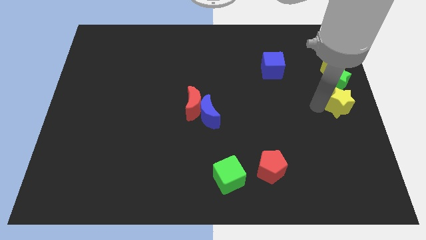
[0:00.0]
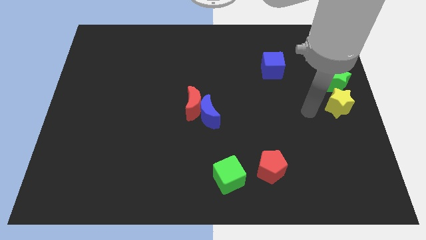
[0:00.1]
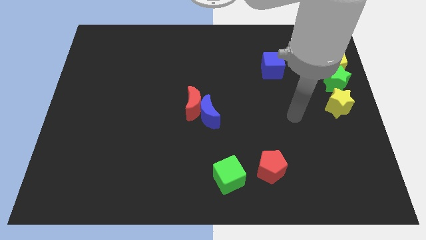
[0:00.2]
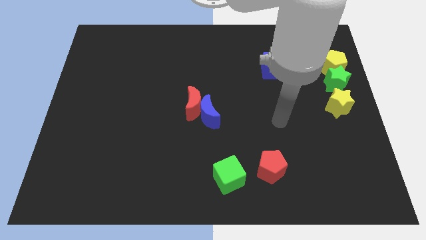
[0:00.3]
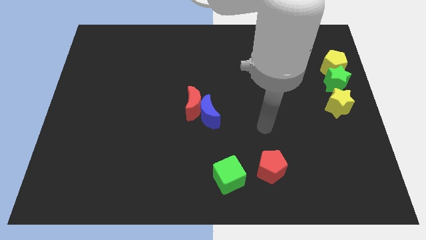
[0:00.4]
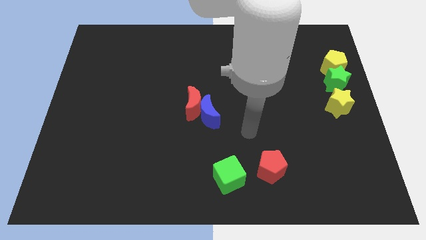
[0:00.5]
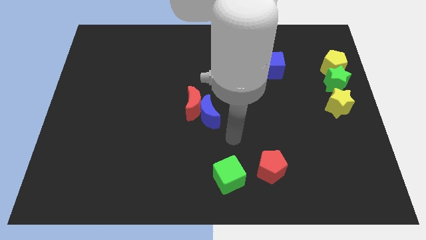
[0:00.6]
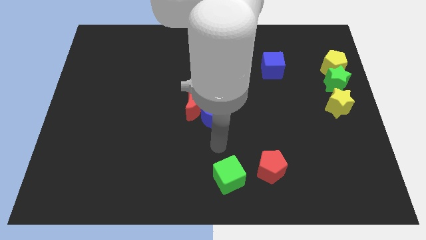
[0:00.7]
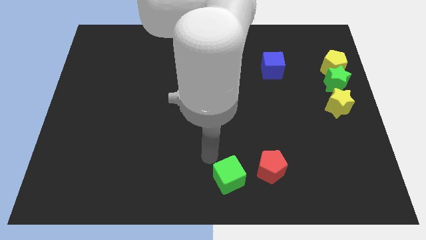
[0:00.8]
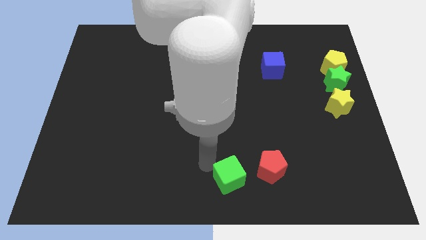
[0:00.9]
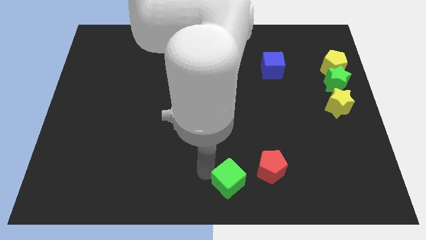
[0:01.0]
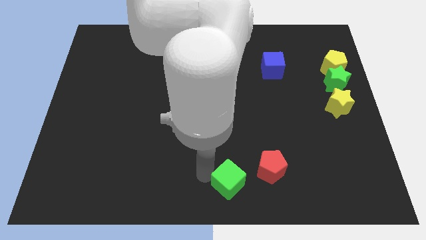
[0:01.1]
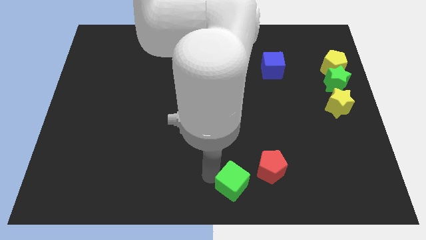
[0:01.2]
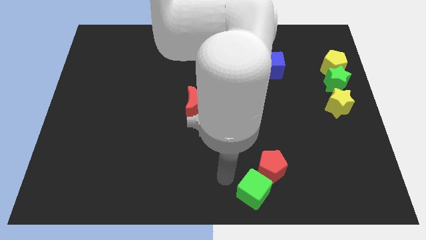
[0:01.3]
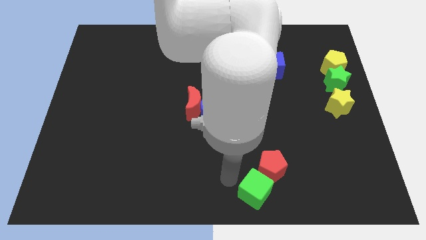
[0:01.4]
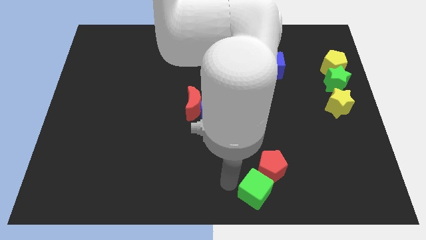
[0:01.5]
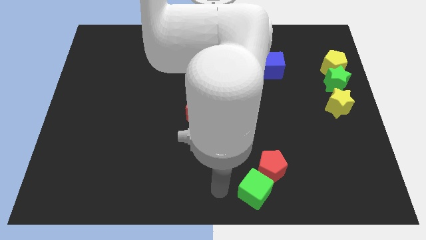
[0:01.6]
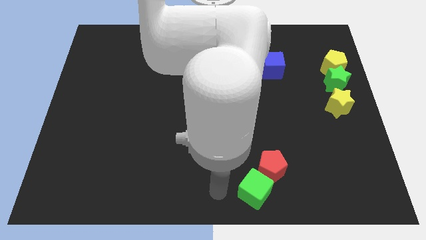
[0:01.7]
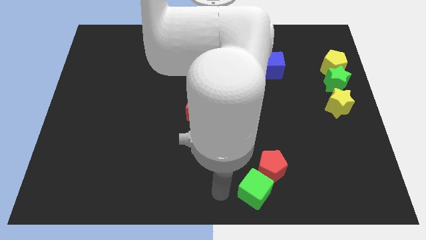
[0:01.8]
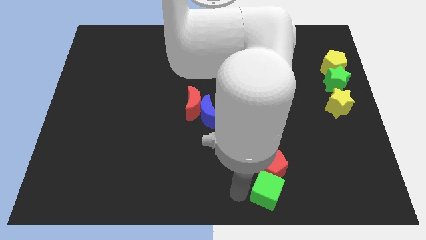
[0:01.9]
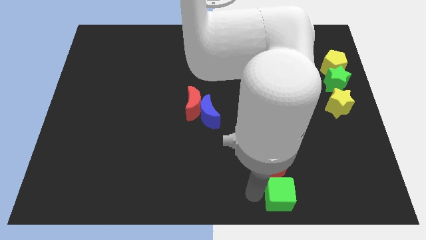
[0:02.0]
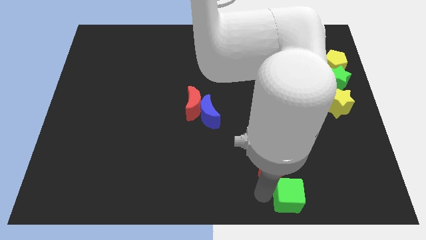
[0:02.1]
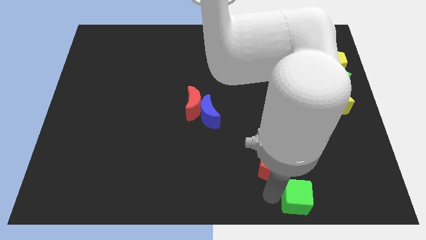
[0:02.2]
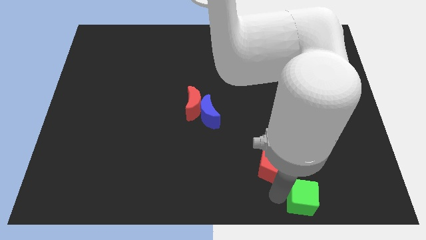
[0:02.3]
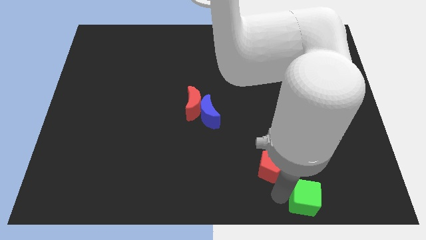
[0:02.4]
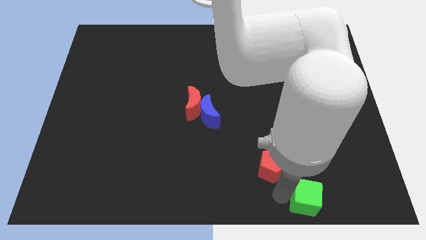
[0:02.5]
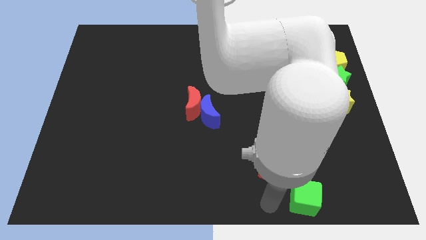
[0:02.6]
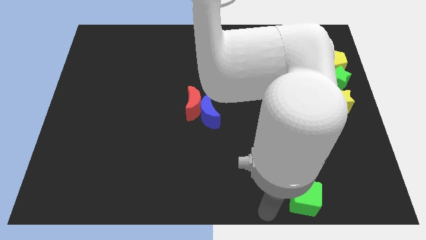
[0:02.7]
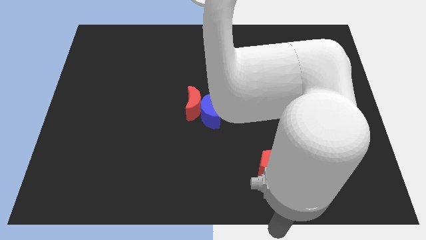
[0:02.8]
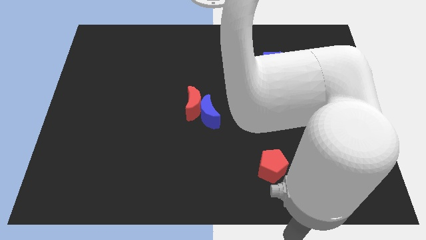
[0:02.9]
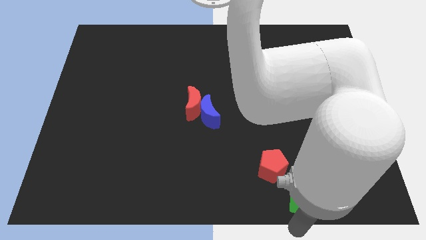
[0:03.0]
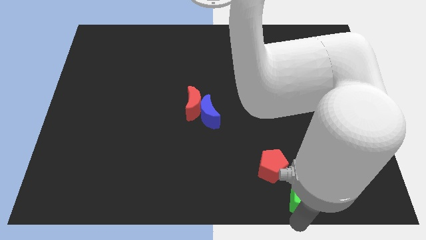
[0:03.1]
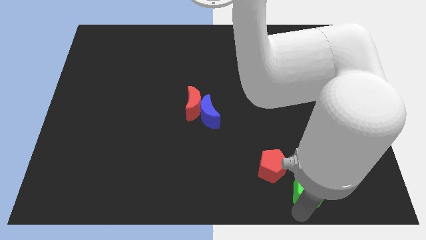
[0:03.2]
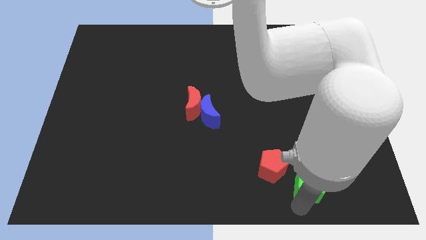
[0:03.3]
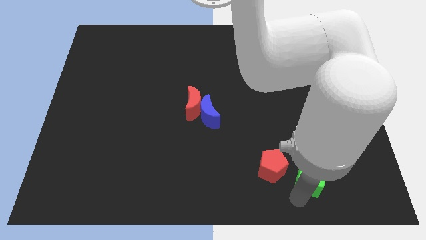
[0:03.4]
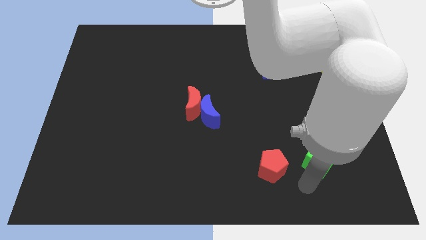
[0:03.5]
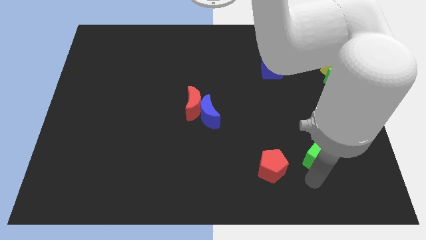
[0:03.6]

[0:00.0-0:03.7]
slide the green cube to the right side of the red pentagon

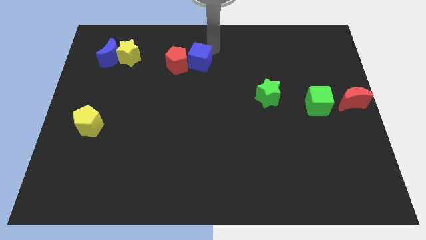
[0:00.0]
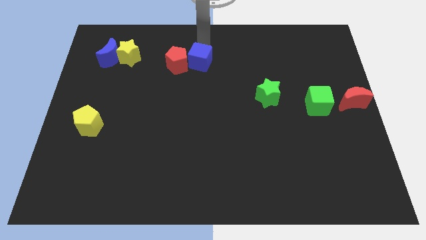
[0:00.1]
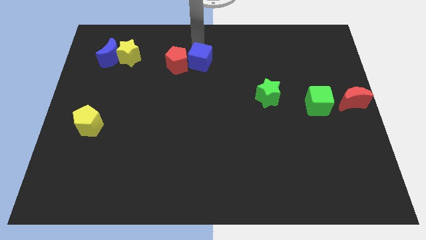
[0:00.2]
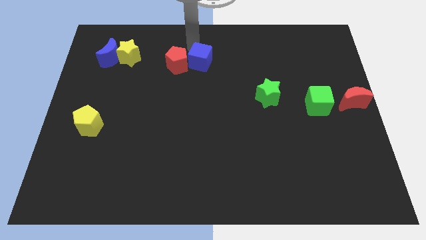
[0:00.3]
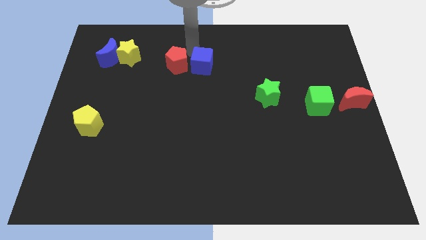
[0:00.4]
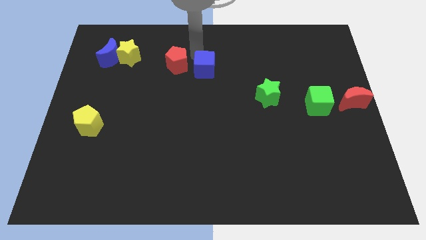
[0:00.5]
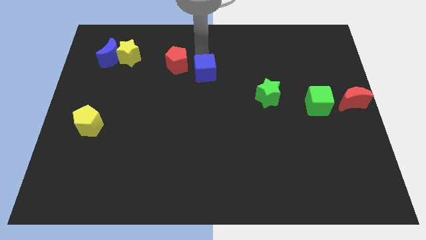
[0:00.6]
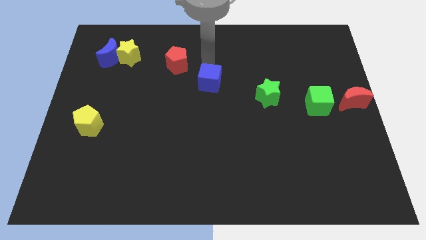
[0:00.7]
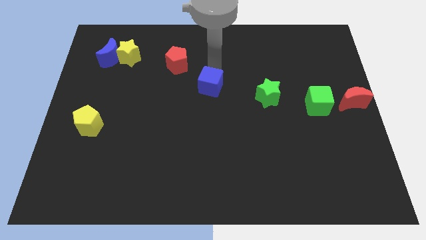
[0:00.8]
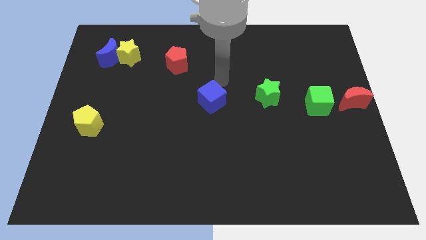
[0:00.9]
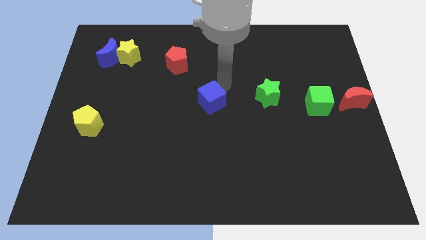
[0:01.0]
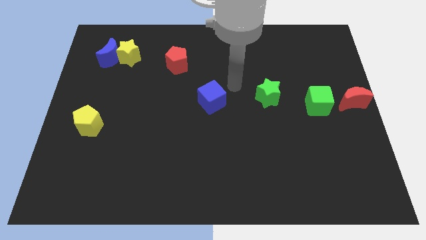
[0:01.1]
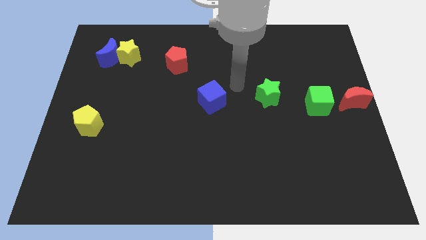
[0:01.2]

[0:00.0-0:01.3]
move the the blue cube to the center

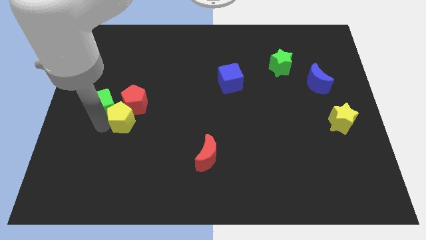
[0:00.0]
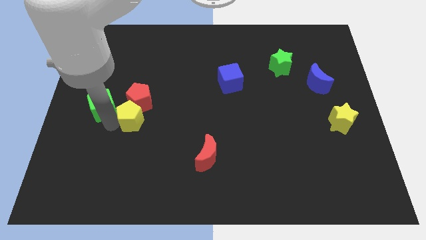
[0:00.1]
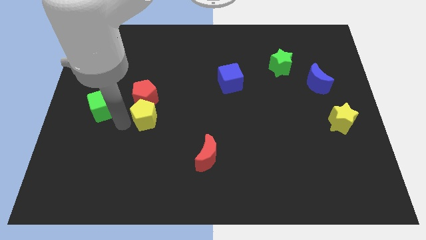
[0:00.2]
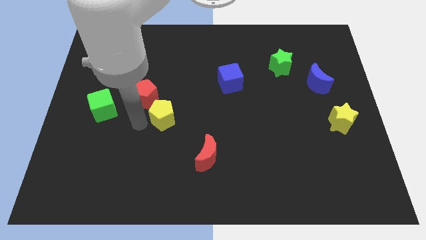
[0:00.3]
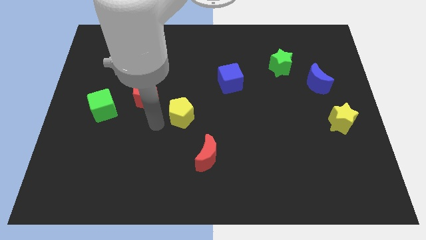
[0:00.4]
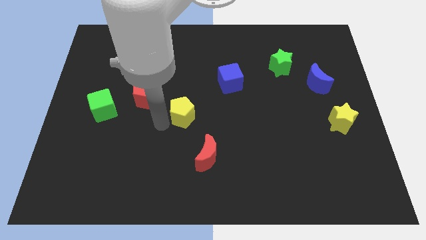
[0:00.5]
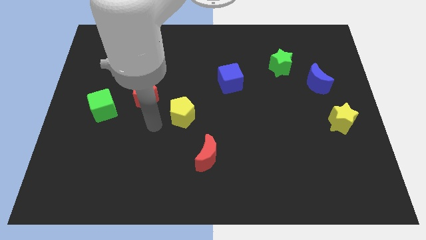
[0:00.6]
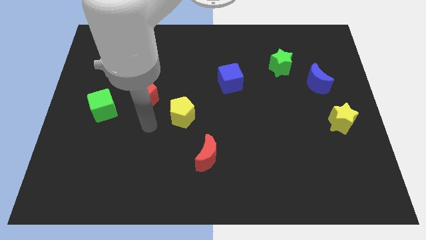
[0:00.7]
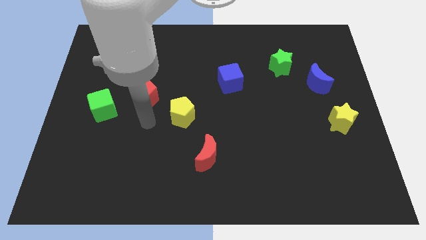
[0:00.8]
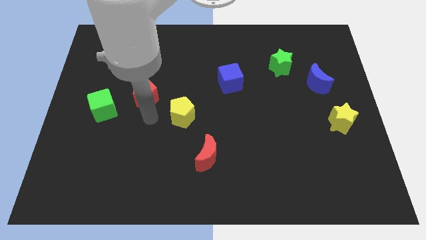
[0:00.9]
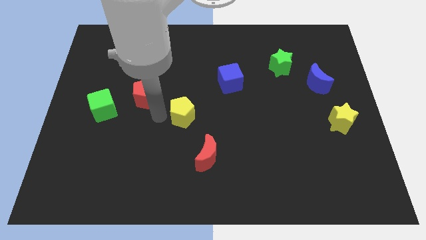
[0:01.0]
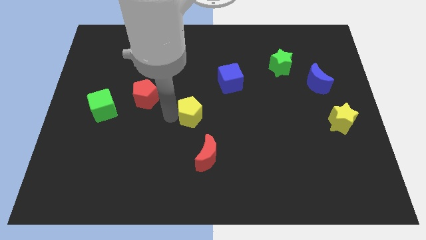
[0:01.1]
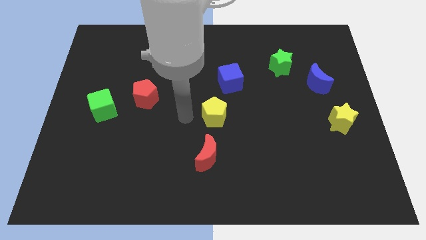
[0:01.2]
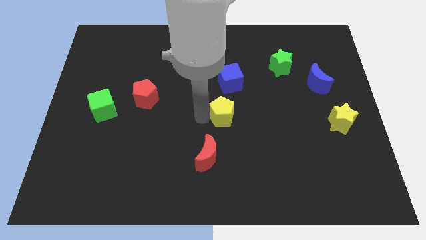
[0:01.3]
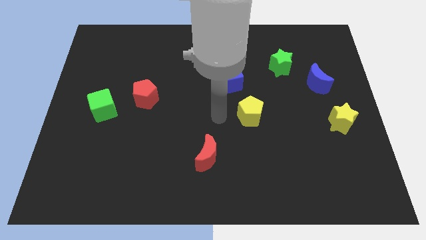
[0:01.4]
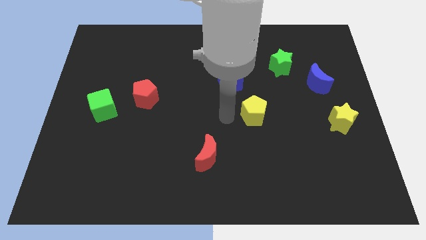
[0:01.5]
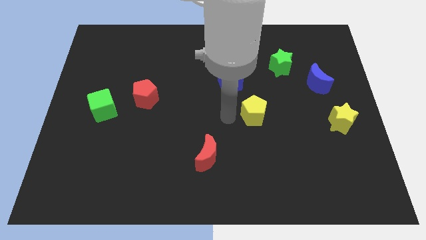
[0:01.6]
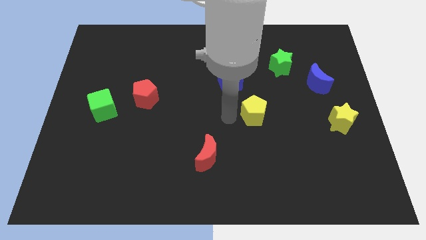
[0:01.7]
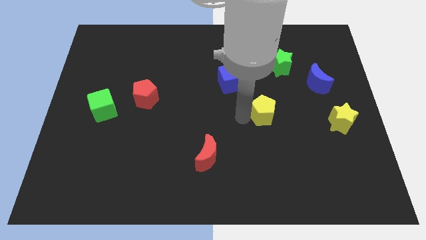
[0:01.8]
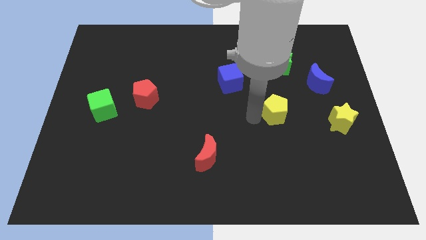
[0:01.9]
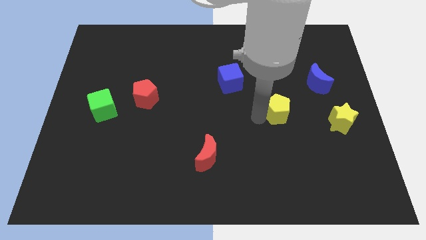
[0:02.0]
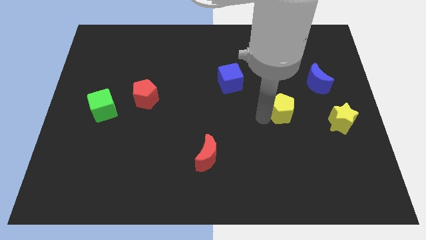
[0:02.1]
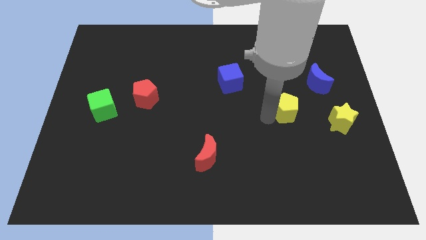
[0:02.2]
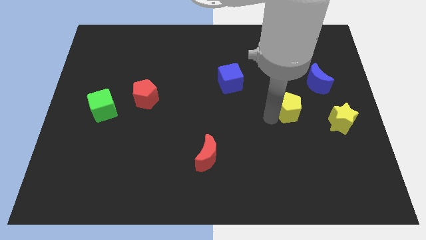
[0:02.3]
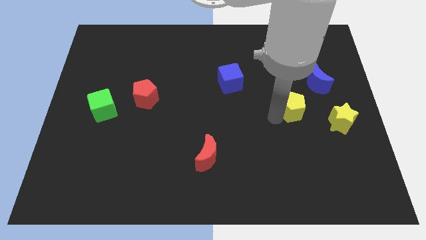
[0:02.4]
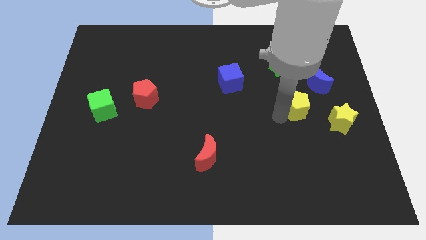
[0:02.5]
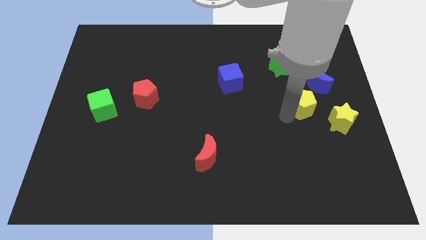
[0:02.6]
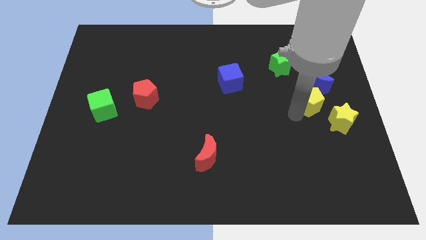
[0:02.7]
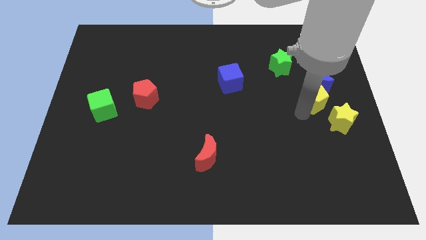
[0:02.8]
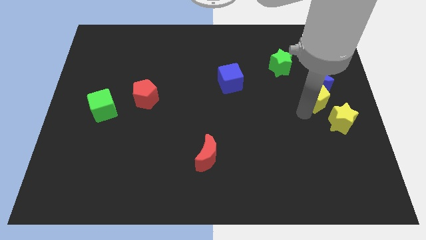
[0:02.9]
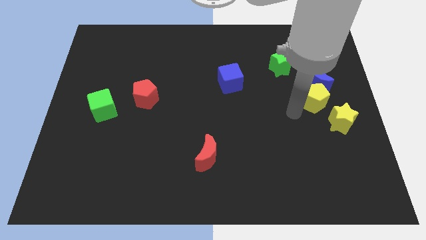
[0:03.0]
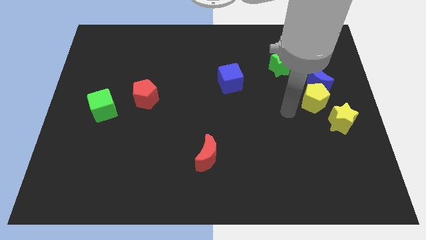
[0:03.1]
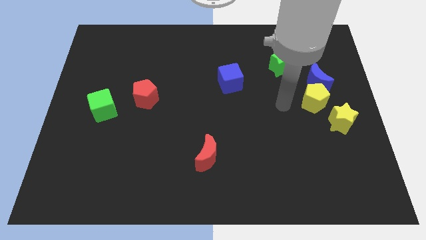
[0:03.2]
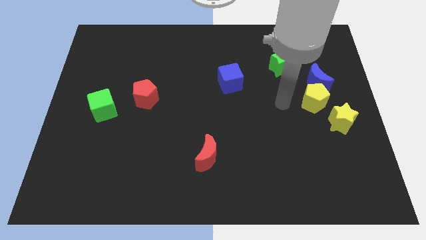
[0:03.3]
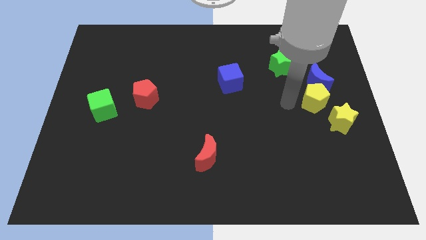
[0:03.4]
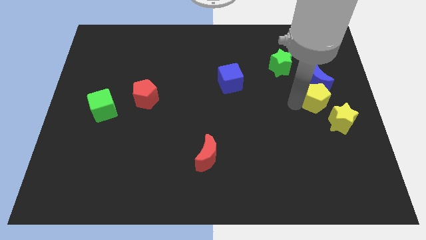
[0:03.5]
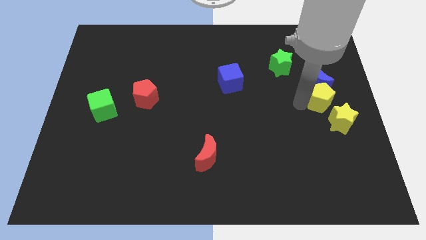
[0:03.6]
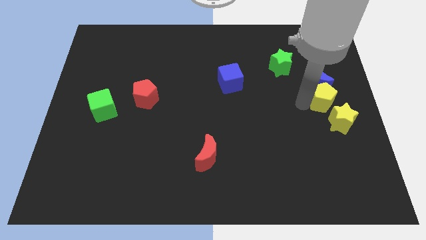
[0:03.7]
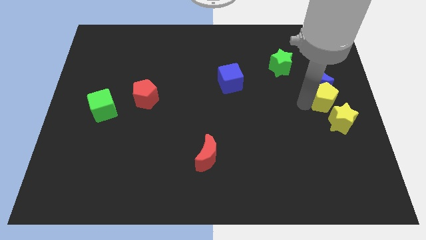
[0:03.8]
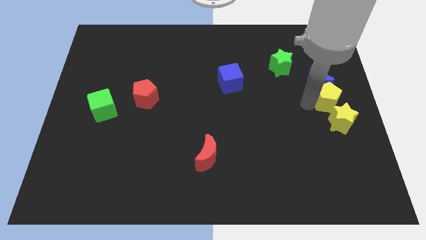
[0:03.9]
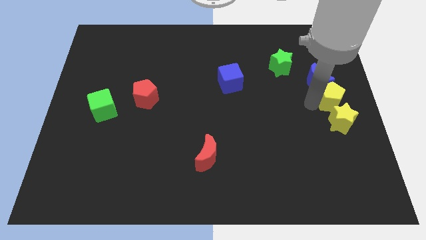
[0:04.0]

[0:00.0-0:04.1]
move the yellow pentagon in between blue crescent and yellow star
